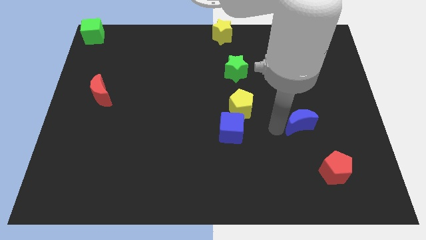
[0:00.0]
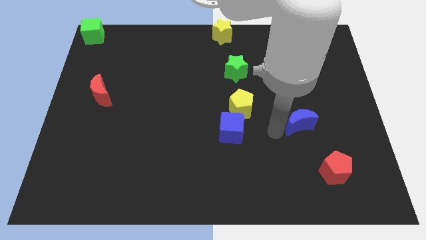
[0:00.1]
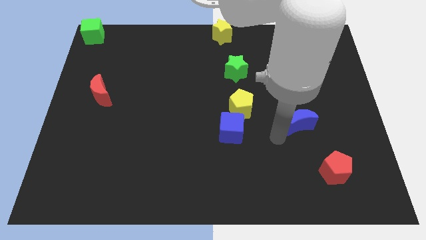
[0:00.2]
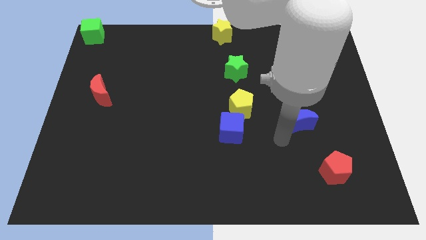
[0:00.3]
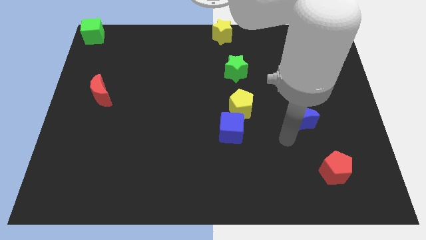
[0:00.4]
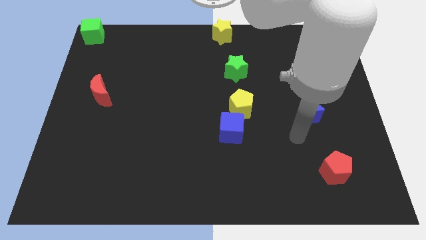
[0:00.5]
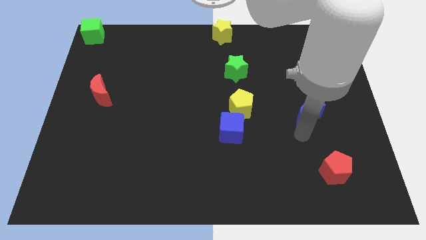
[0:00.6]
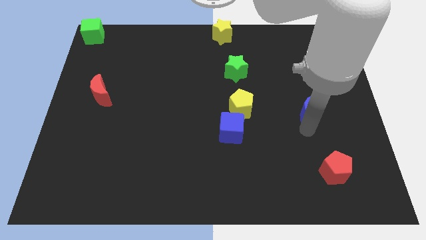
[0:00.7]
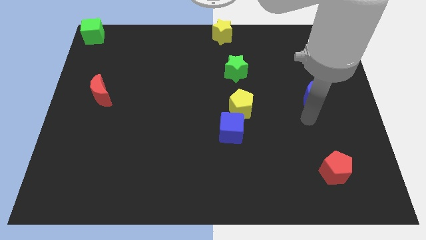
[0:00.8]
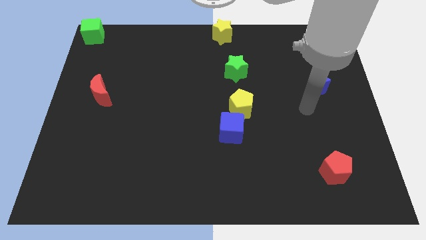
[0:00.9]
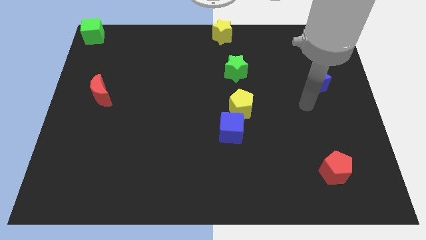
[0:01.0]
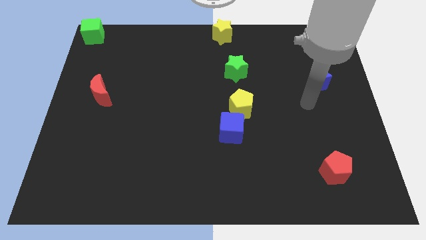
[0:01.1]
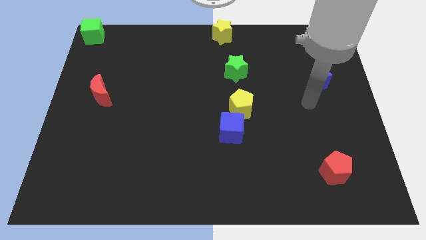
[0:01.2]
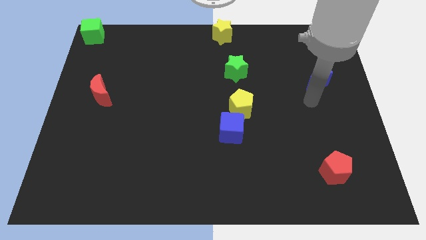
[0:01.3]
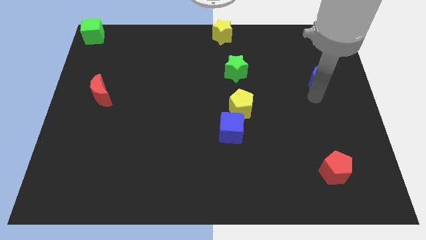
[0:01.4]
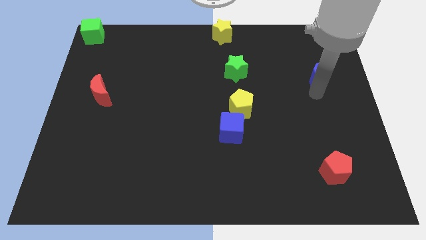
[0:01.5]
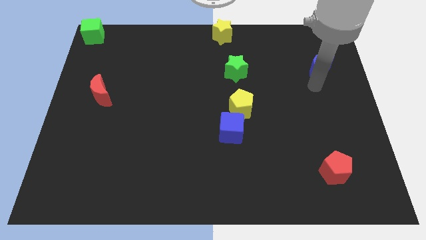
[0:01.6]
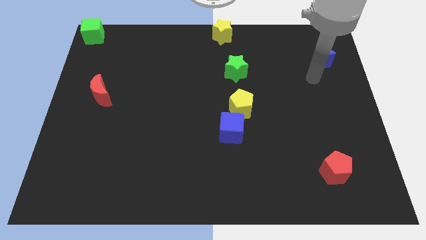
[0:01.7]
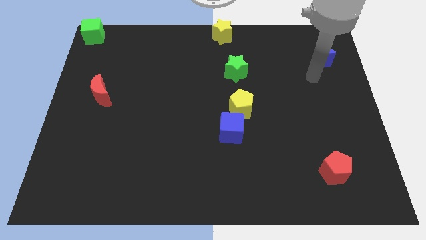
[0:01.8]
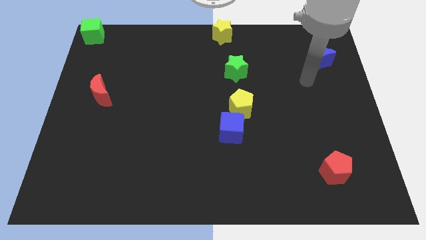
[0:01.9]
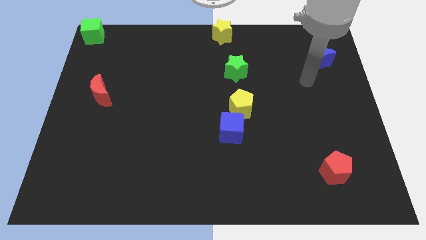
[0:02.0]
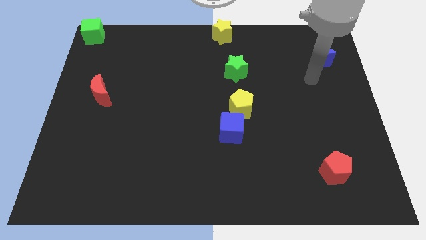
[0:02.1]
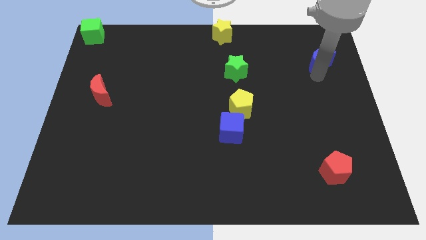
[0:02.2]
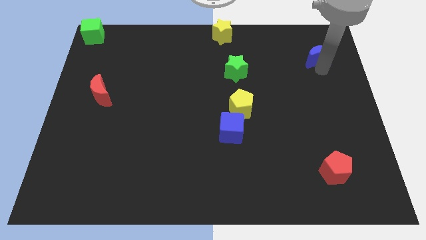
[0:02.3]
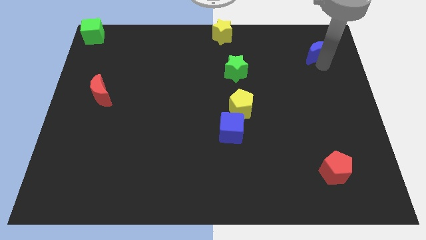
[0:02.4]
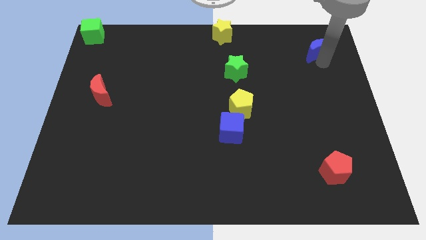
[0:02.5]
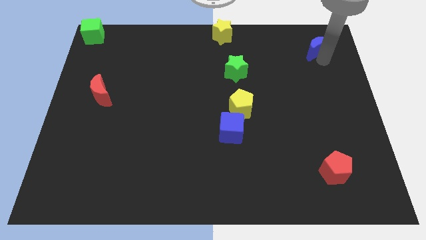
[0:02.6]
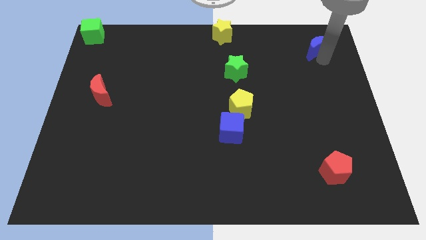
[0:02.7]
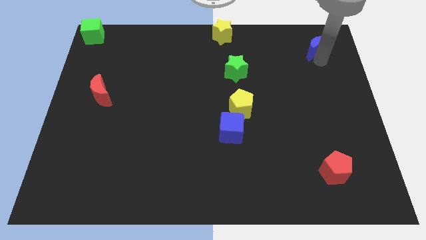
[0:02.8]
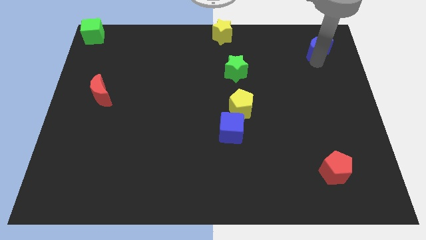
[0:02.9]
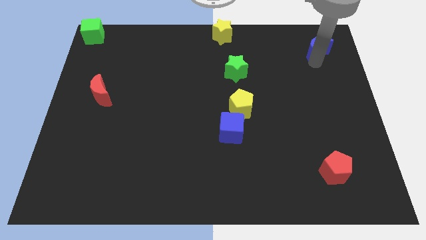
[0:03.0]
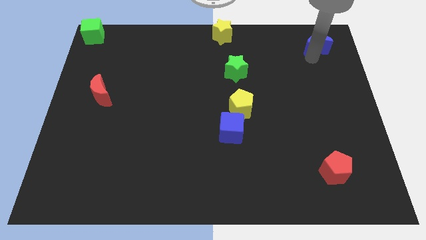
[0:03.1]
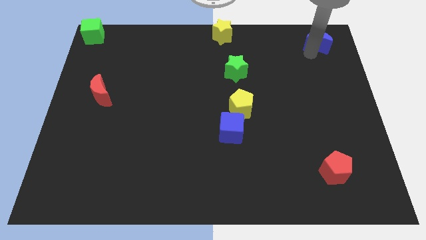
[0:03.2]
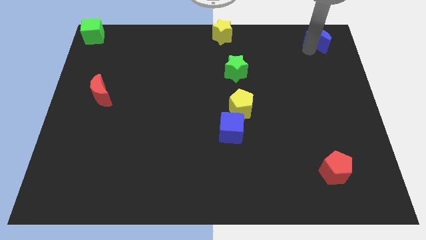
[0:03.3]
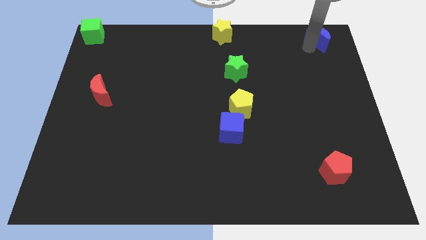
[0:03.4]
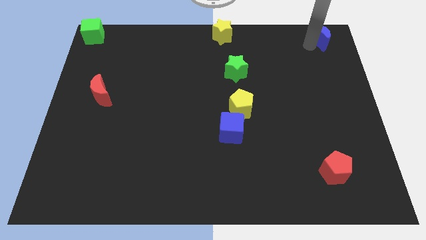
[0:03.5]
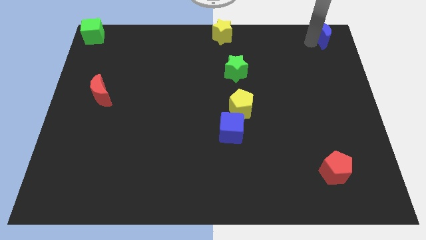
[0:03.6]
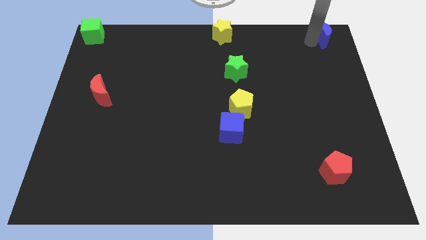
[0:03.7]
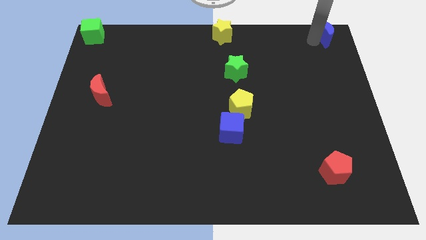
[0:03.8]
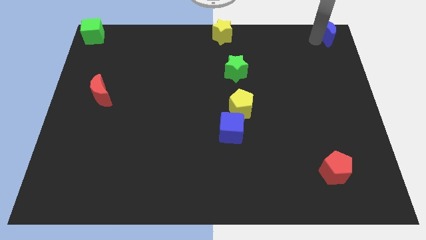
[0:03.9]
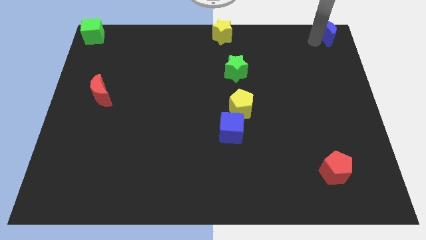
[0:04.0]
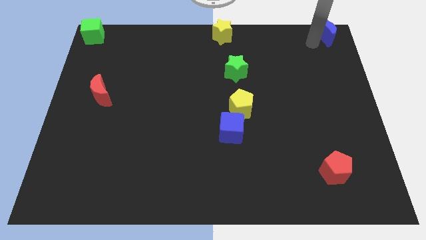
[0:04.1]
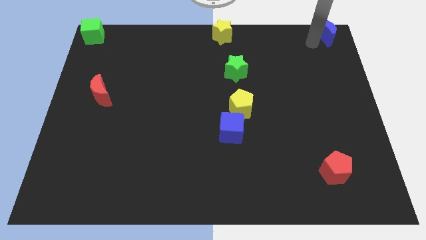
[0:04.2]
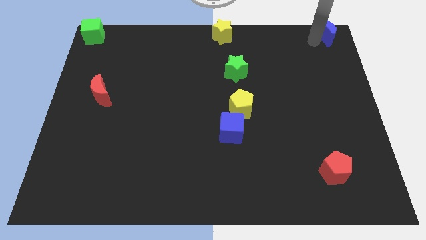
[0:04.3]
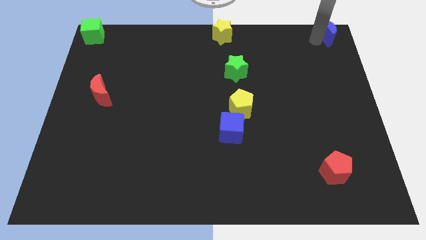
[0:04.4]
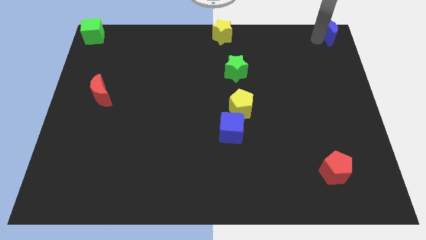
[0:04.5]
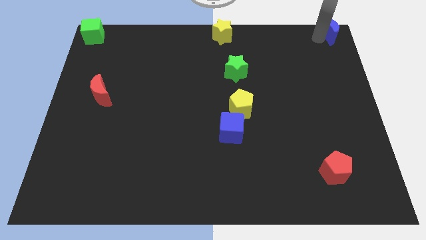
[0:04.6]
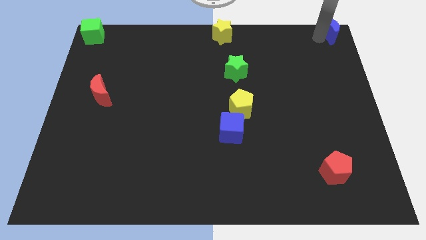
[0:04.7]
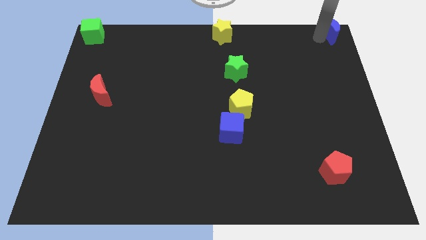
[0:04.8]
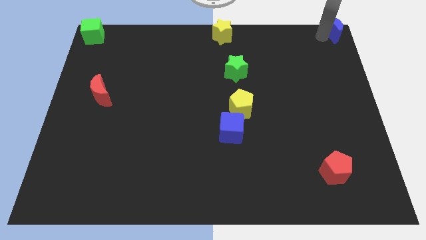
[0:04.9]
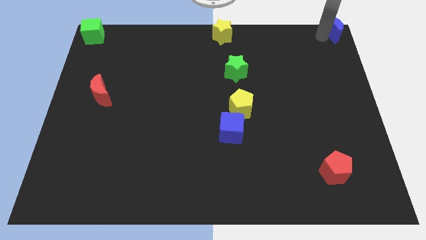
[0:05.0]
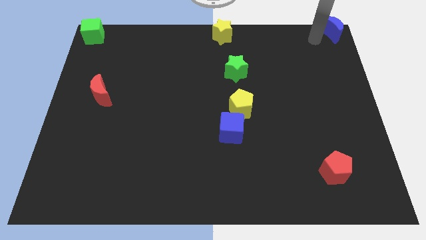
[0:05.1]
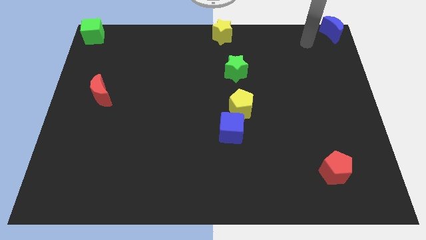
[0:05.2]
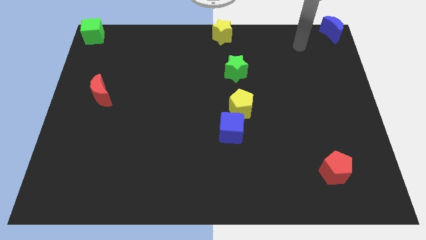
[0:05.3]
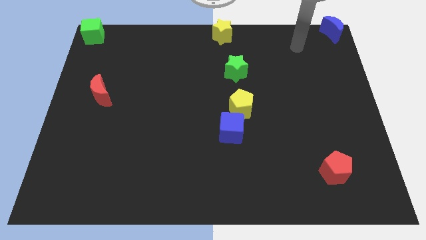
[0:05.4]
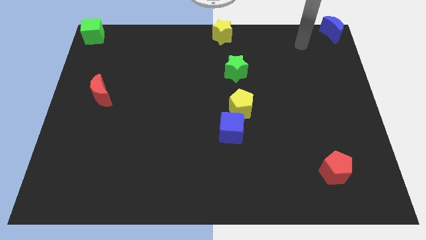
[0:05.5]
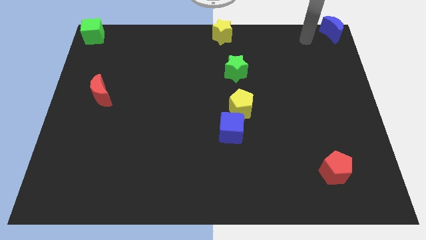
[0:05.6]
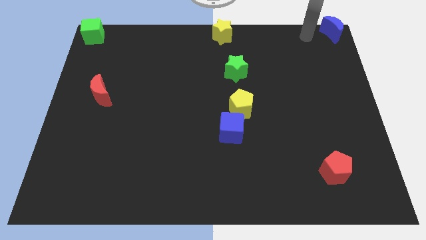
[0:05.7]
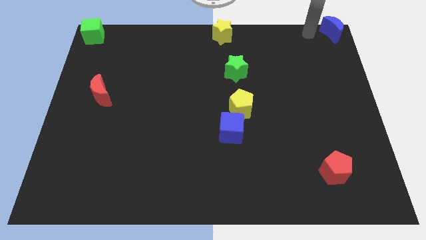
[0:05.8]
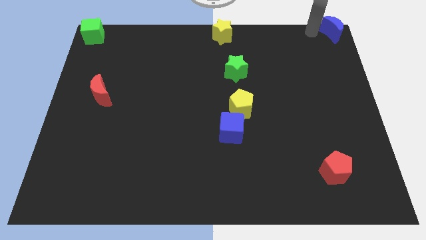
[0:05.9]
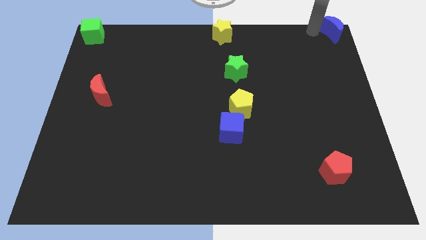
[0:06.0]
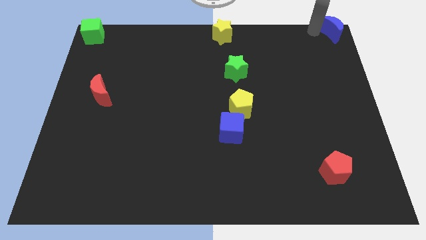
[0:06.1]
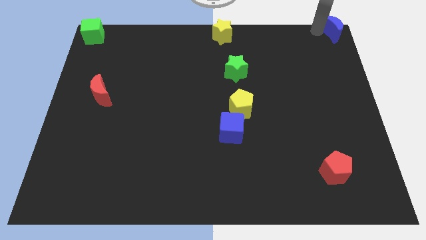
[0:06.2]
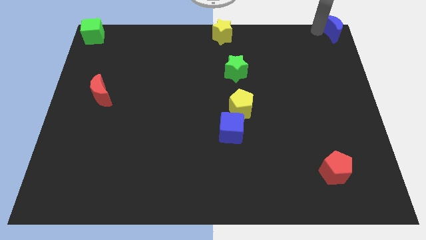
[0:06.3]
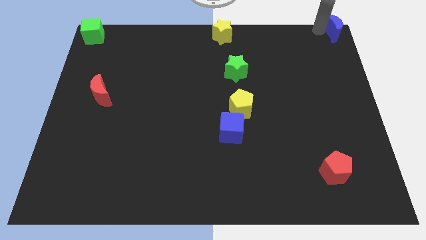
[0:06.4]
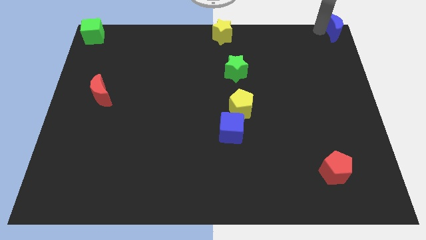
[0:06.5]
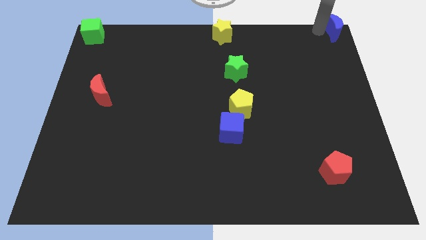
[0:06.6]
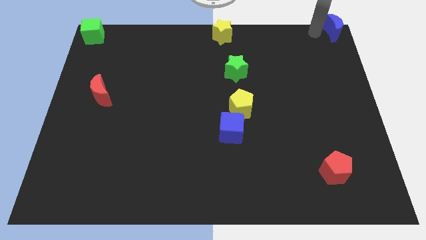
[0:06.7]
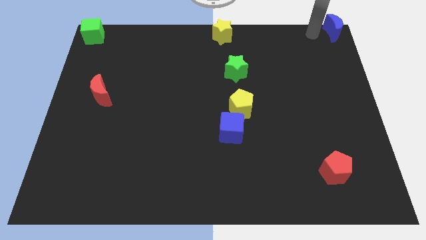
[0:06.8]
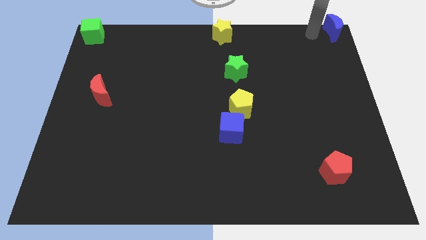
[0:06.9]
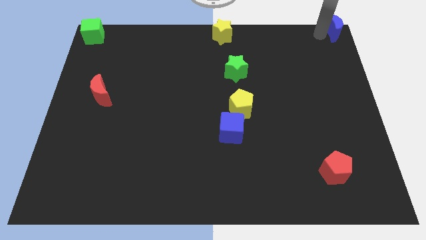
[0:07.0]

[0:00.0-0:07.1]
move the blue crescent diagonally right to the green star

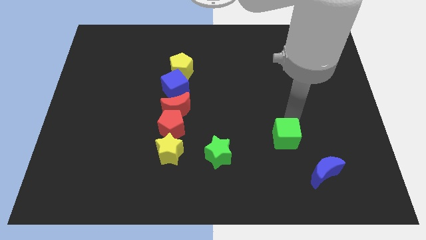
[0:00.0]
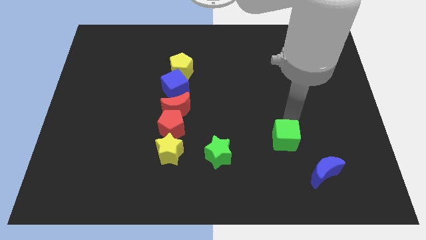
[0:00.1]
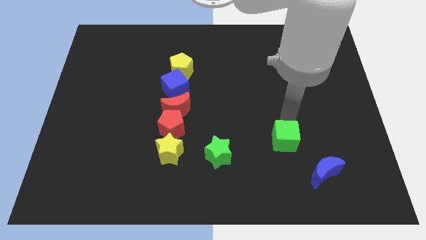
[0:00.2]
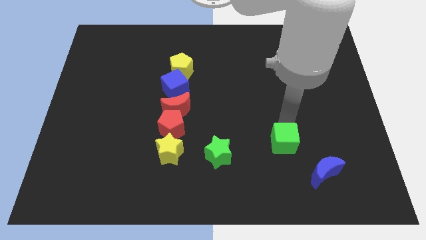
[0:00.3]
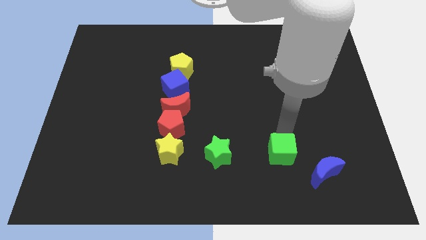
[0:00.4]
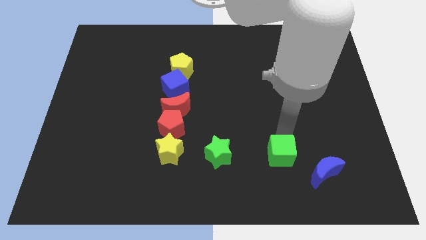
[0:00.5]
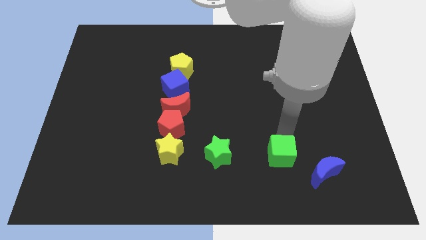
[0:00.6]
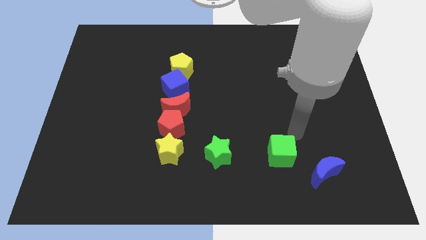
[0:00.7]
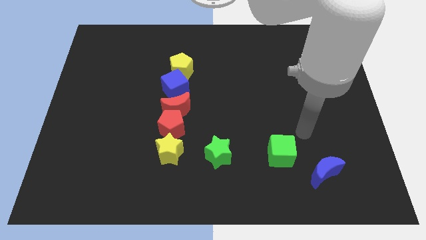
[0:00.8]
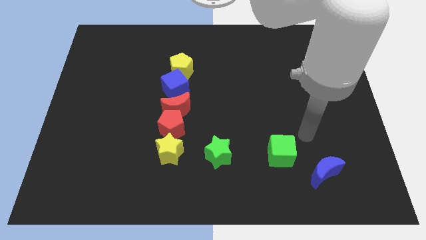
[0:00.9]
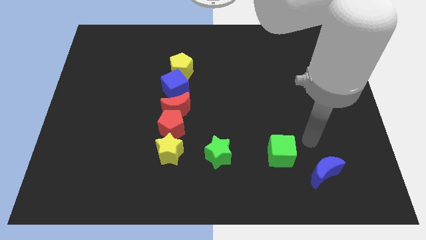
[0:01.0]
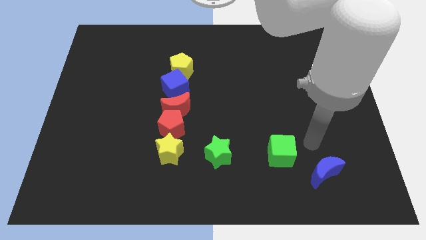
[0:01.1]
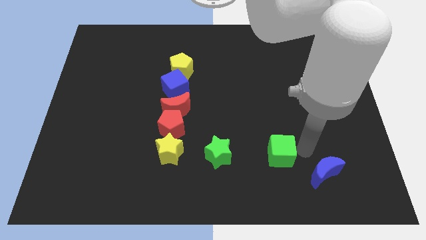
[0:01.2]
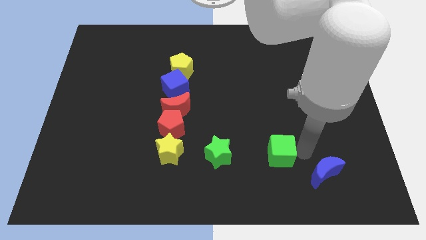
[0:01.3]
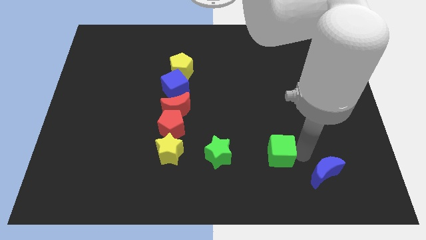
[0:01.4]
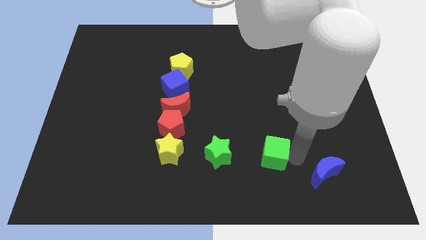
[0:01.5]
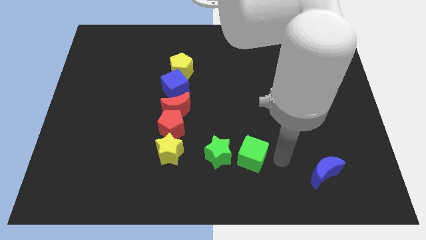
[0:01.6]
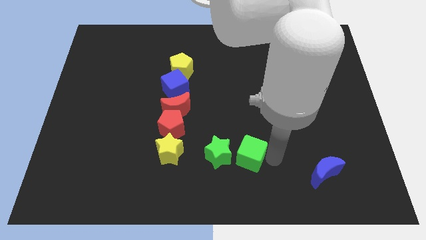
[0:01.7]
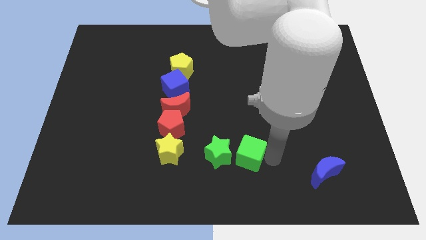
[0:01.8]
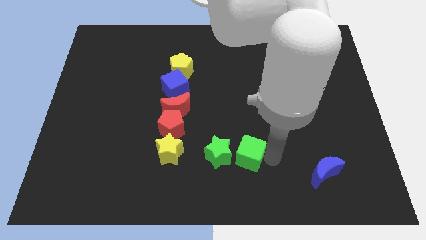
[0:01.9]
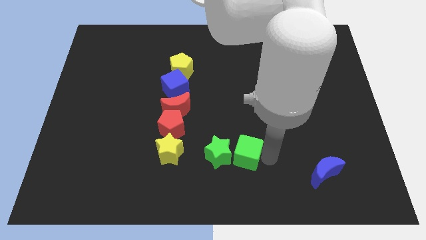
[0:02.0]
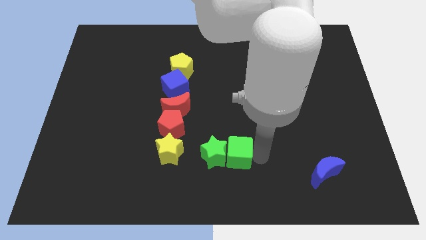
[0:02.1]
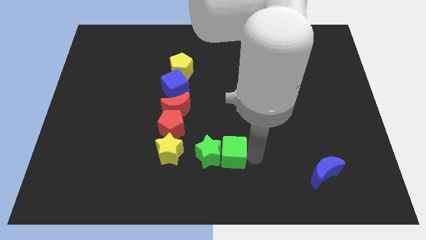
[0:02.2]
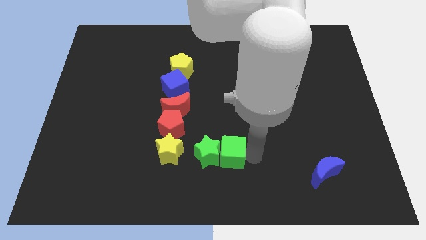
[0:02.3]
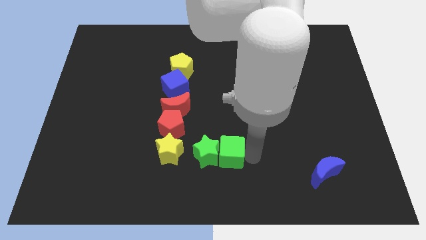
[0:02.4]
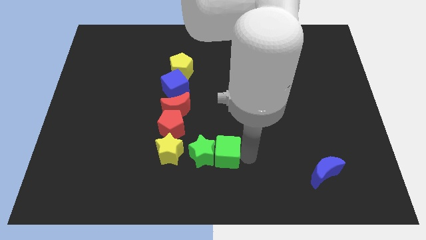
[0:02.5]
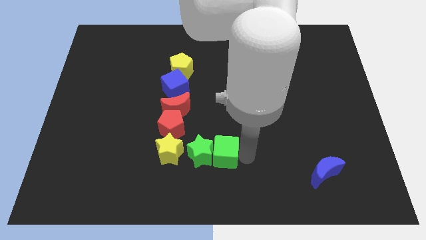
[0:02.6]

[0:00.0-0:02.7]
move the green cube into the green star to the right
